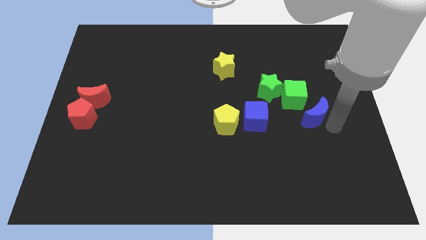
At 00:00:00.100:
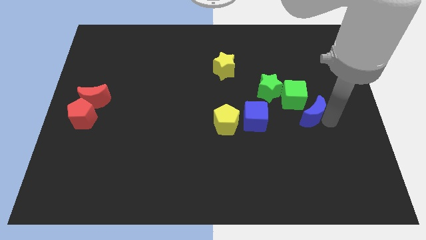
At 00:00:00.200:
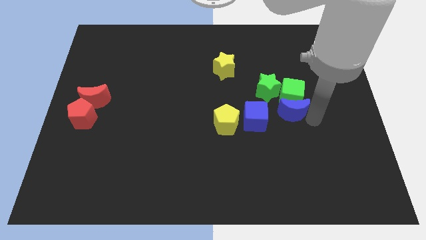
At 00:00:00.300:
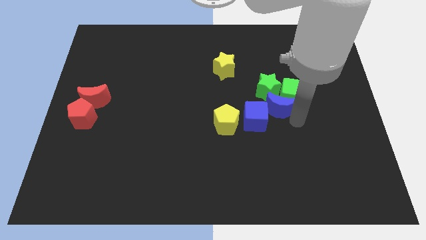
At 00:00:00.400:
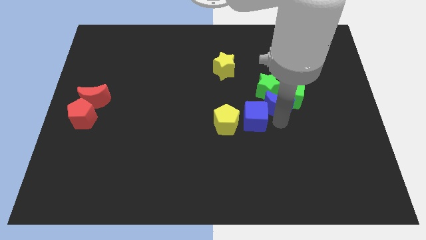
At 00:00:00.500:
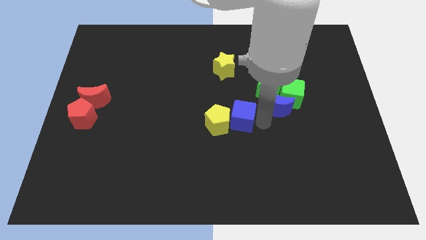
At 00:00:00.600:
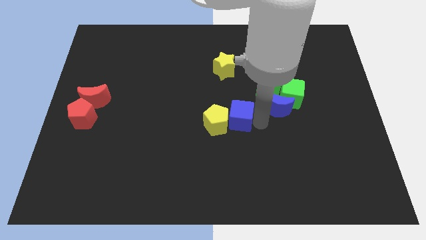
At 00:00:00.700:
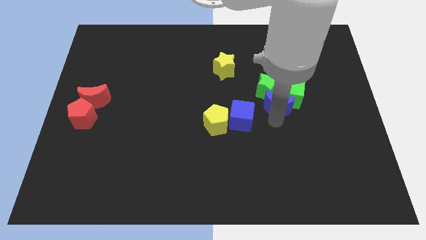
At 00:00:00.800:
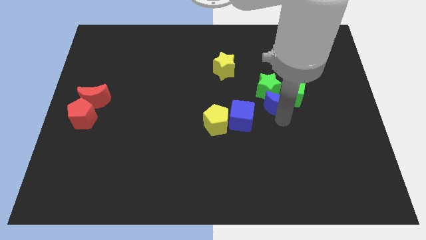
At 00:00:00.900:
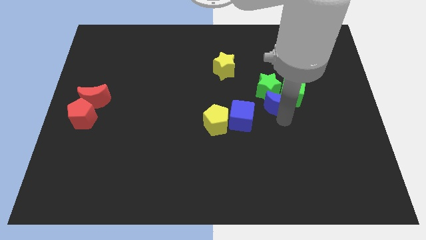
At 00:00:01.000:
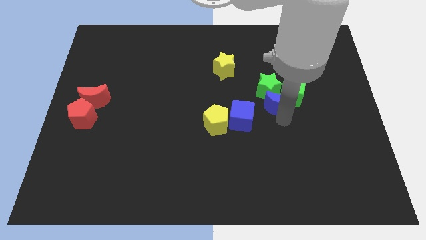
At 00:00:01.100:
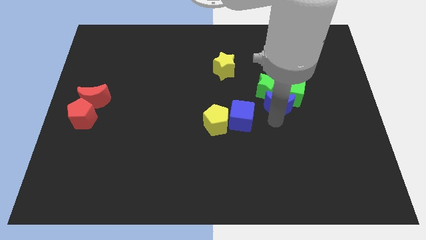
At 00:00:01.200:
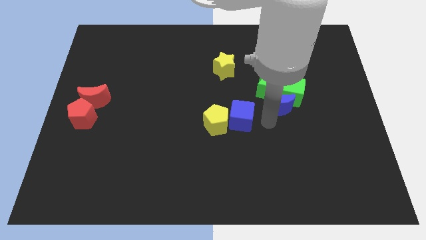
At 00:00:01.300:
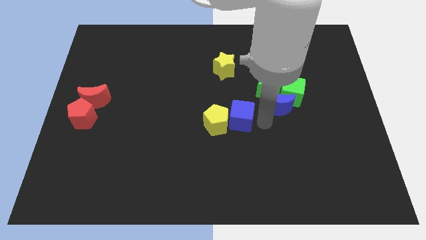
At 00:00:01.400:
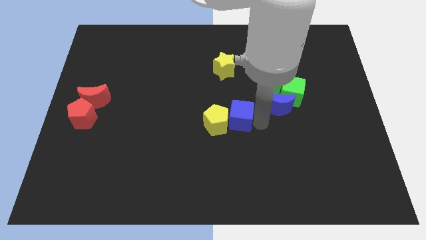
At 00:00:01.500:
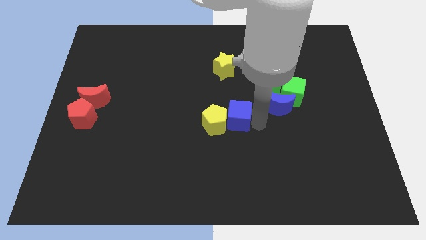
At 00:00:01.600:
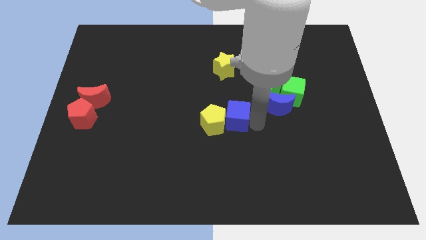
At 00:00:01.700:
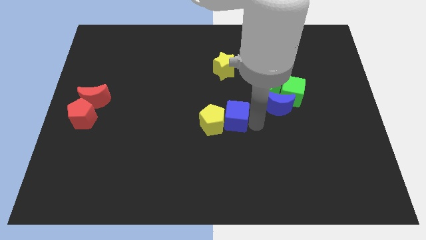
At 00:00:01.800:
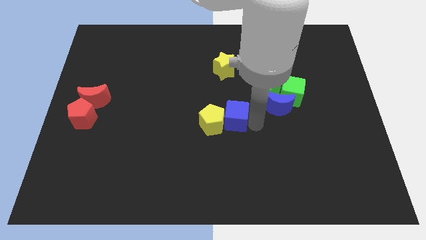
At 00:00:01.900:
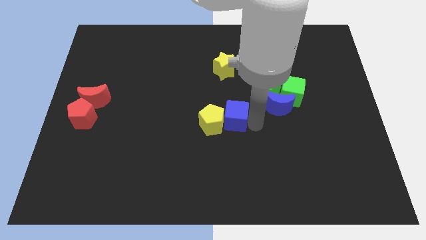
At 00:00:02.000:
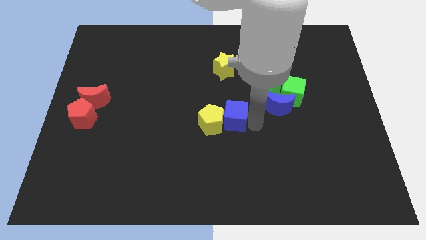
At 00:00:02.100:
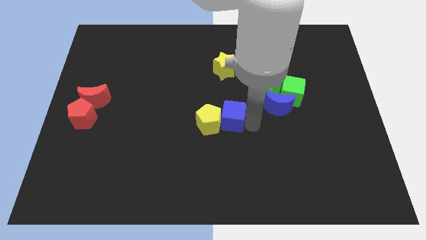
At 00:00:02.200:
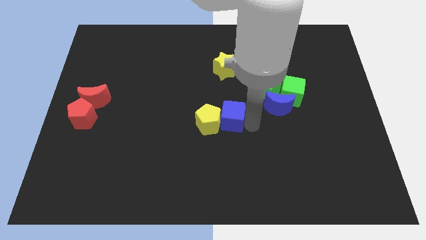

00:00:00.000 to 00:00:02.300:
push the blue cube into the yellow pentagon

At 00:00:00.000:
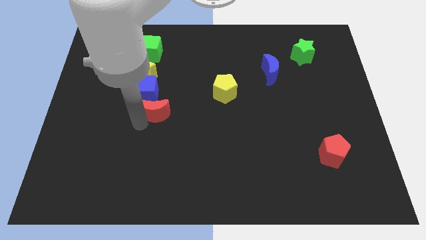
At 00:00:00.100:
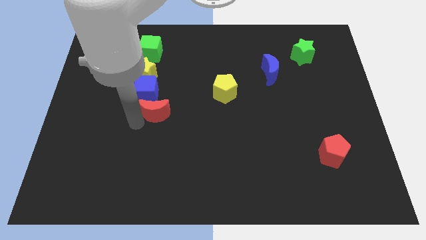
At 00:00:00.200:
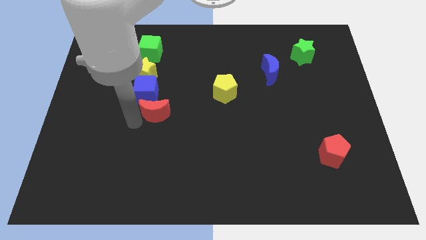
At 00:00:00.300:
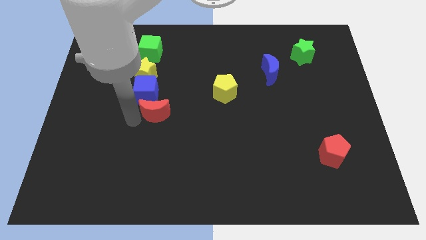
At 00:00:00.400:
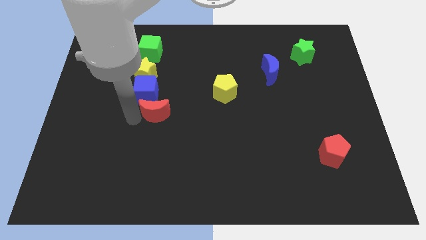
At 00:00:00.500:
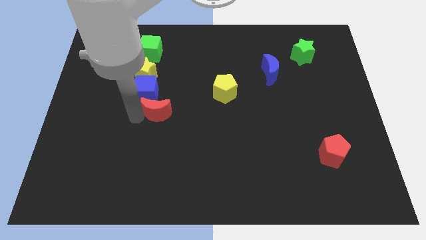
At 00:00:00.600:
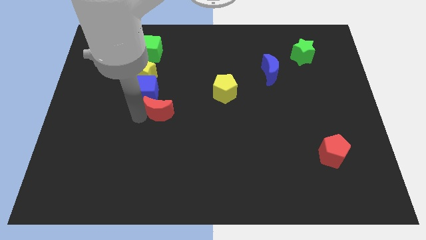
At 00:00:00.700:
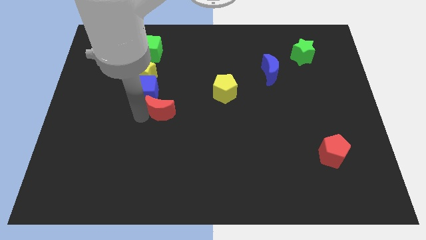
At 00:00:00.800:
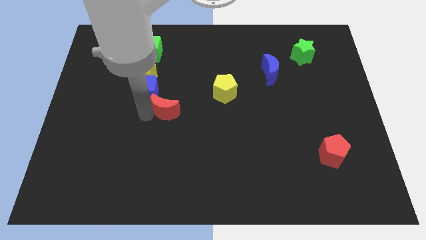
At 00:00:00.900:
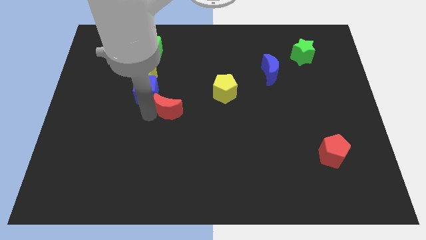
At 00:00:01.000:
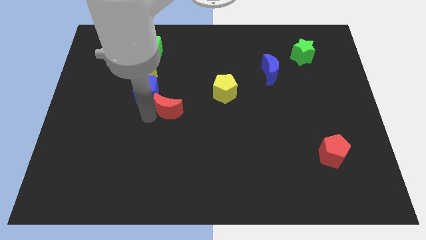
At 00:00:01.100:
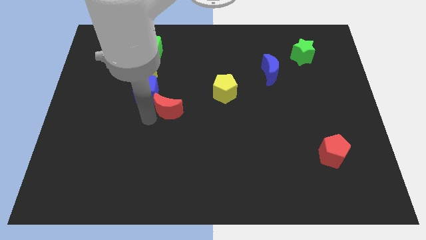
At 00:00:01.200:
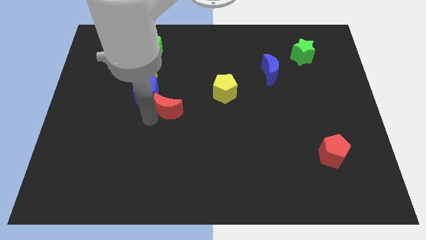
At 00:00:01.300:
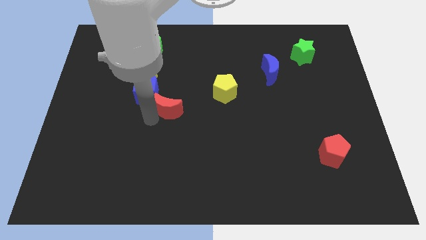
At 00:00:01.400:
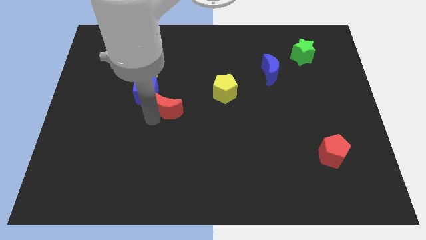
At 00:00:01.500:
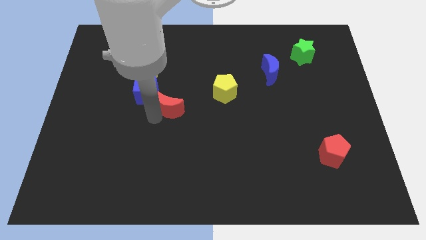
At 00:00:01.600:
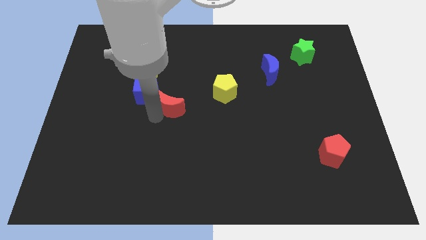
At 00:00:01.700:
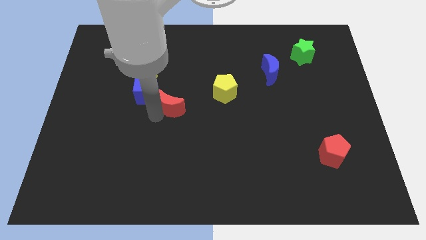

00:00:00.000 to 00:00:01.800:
move the red moon diagonal to the blue cube

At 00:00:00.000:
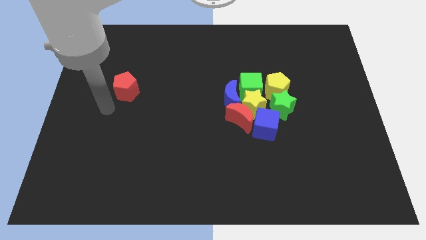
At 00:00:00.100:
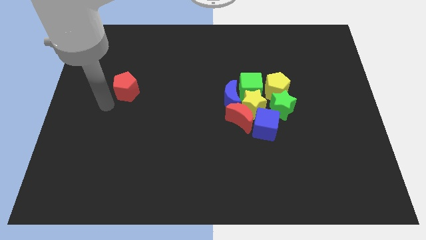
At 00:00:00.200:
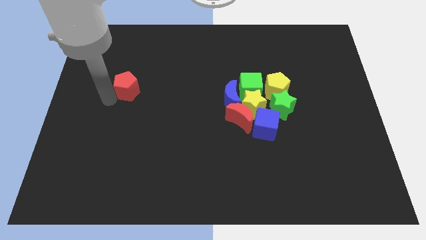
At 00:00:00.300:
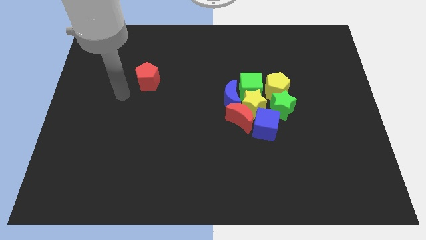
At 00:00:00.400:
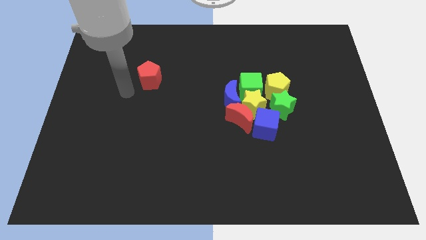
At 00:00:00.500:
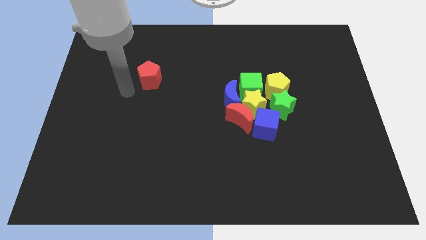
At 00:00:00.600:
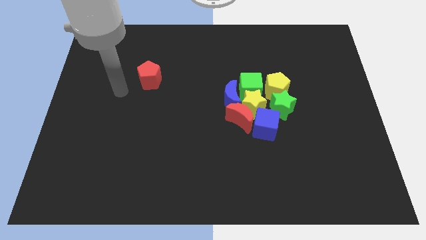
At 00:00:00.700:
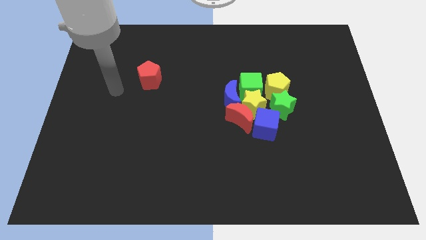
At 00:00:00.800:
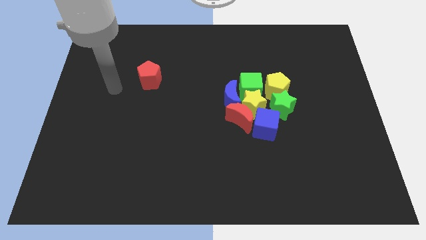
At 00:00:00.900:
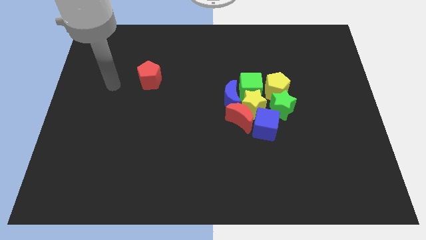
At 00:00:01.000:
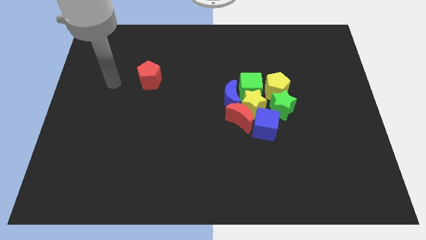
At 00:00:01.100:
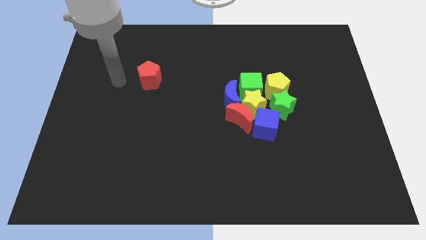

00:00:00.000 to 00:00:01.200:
move red pentagon slightly up

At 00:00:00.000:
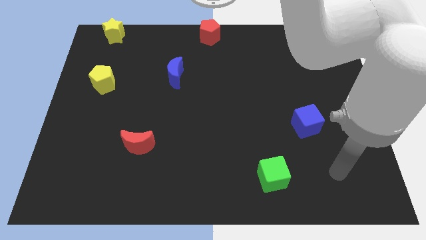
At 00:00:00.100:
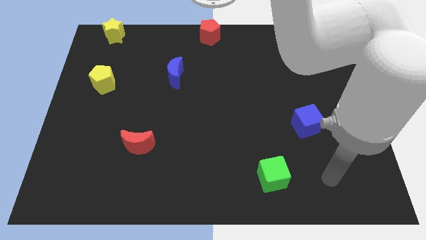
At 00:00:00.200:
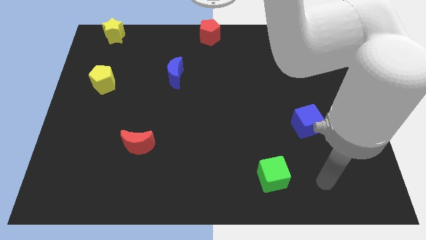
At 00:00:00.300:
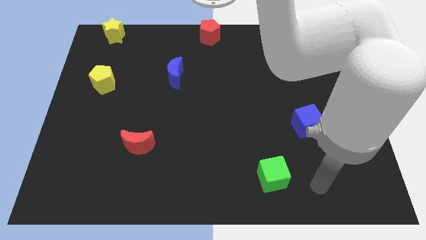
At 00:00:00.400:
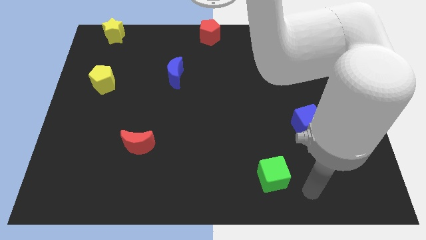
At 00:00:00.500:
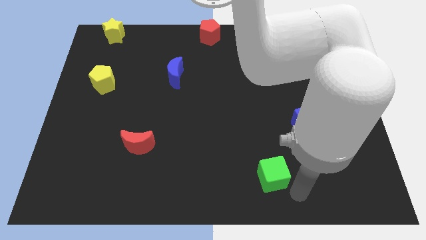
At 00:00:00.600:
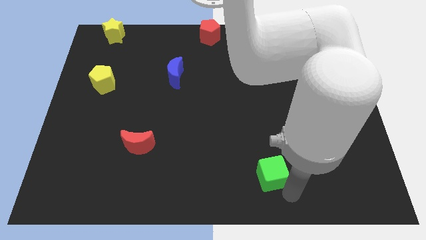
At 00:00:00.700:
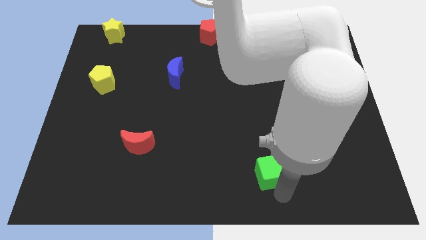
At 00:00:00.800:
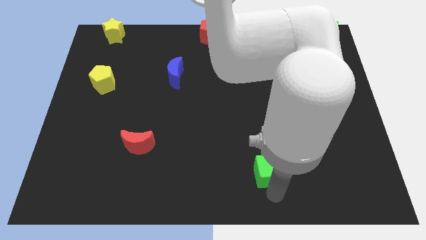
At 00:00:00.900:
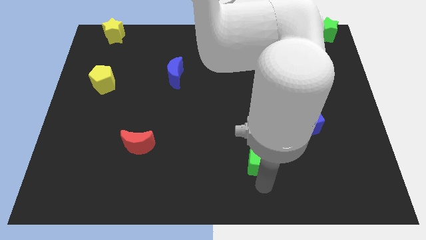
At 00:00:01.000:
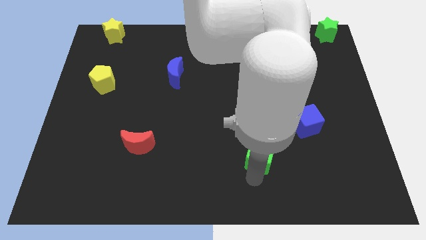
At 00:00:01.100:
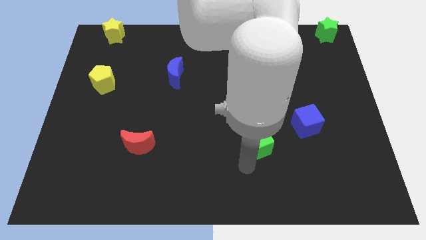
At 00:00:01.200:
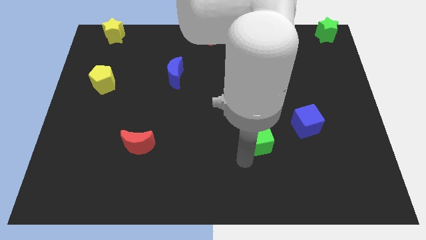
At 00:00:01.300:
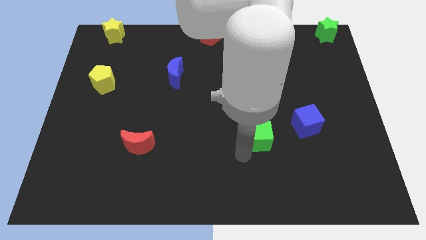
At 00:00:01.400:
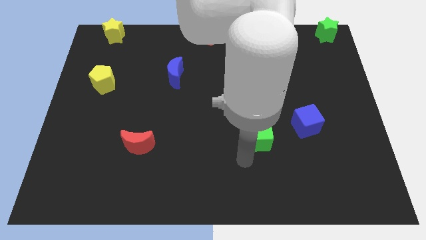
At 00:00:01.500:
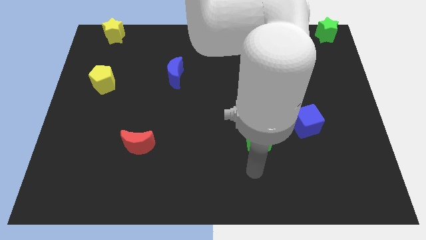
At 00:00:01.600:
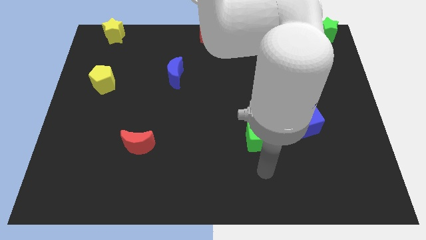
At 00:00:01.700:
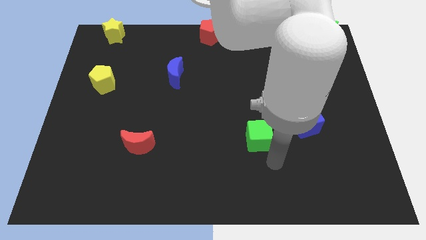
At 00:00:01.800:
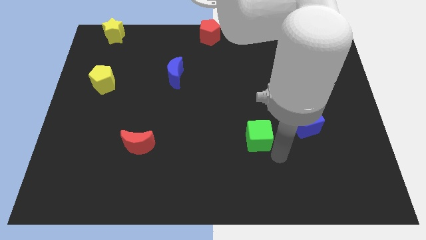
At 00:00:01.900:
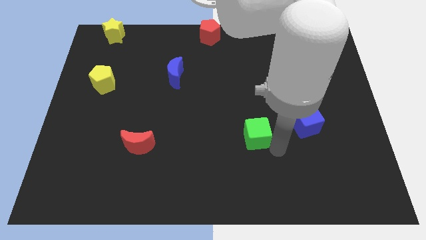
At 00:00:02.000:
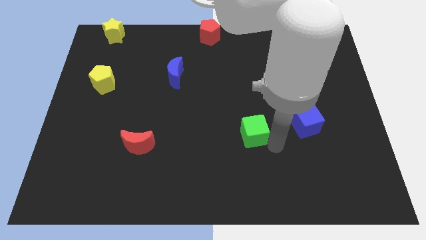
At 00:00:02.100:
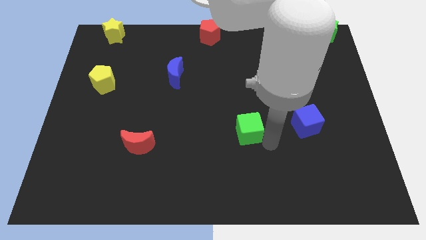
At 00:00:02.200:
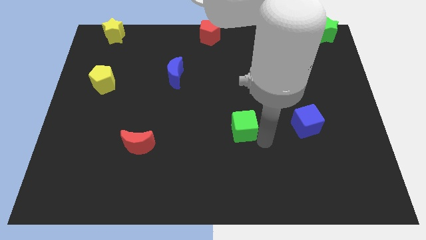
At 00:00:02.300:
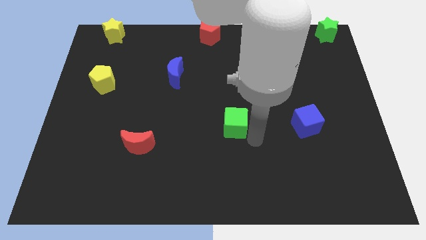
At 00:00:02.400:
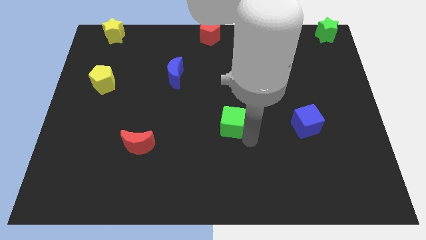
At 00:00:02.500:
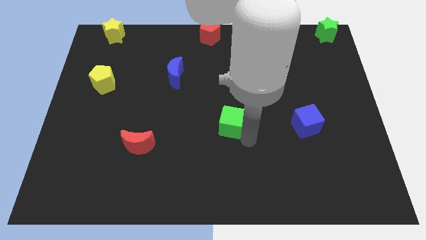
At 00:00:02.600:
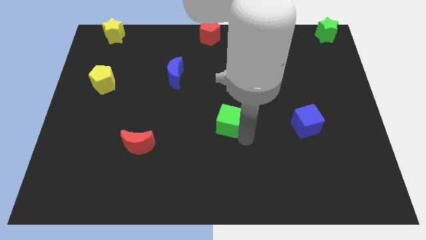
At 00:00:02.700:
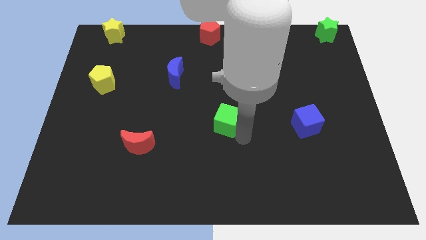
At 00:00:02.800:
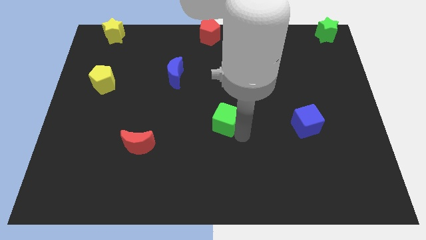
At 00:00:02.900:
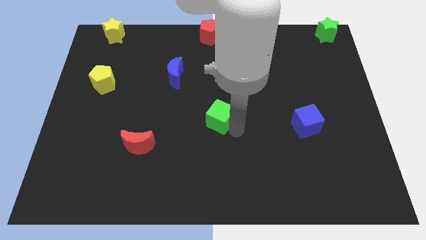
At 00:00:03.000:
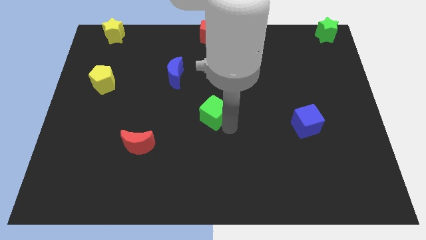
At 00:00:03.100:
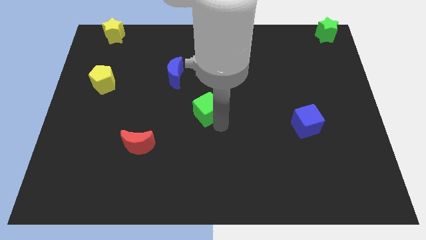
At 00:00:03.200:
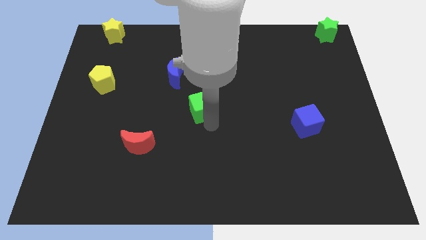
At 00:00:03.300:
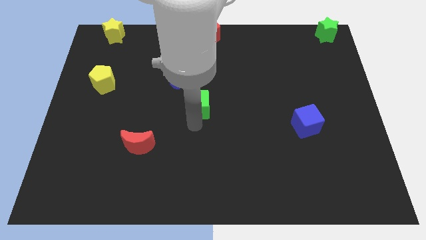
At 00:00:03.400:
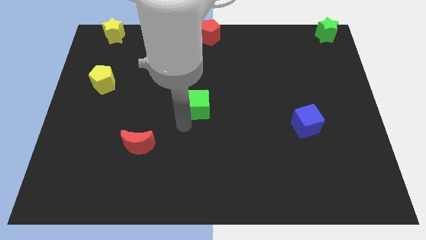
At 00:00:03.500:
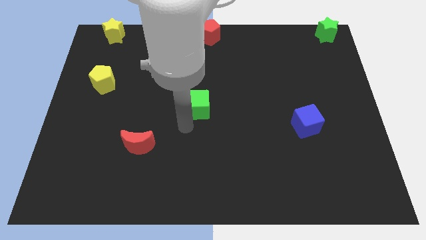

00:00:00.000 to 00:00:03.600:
place the green cube vertically below the red pentagon
